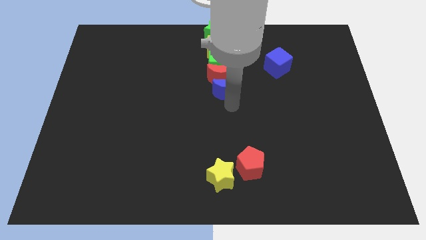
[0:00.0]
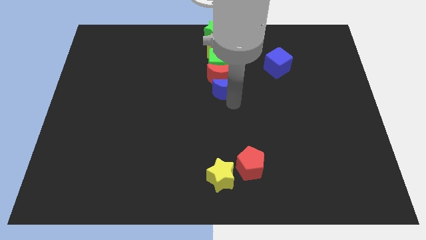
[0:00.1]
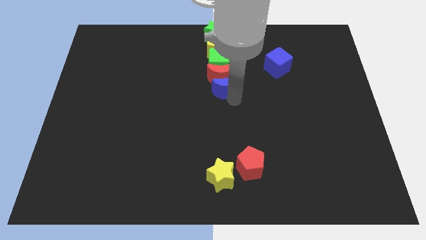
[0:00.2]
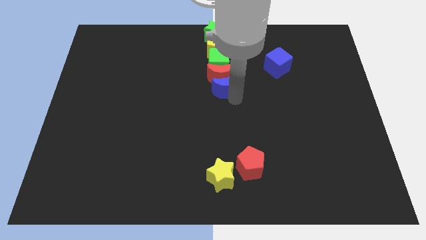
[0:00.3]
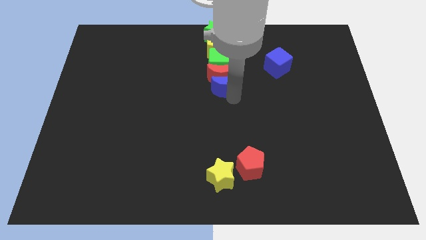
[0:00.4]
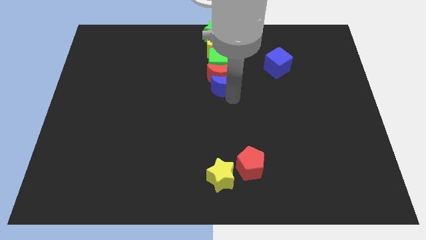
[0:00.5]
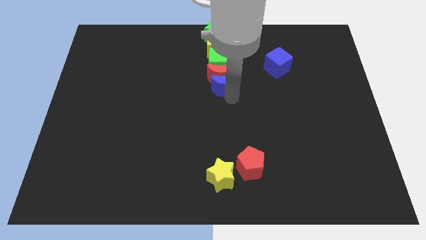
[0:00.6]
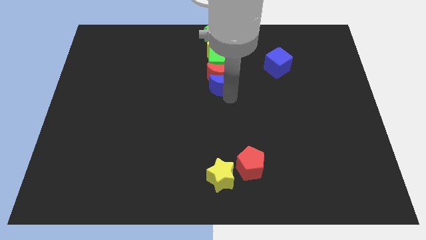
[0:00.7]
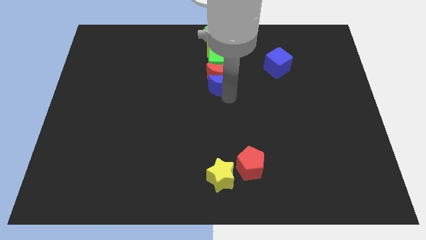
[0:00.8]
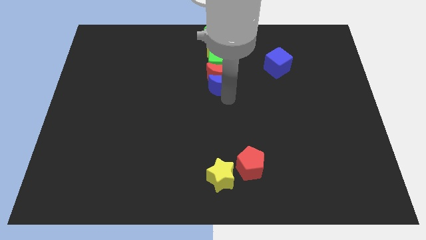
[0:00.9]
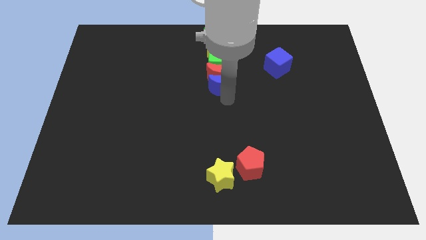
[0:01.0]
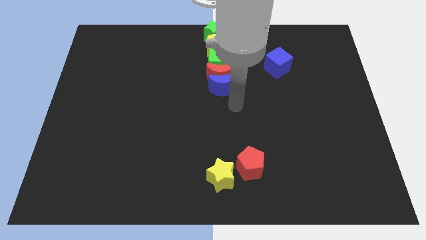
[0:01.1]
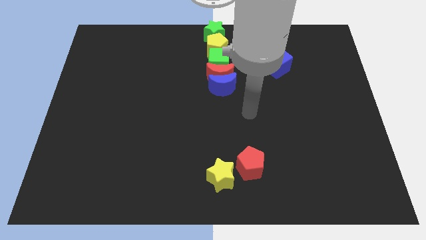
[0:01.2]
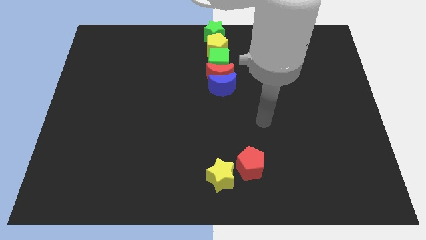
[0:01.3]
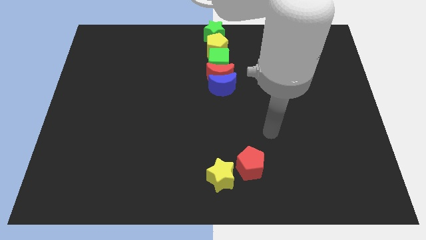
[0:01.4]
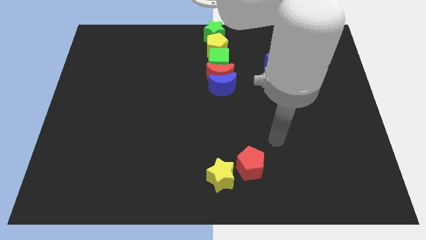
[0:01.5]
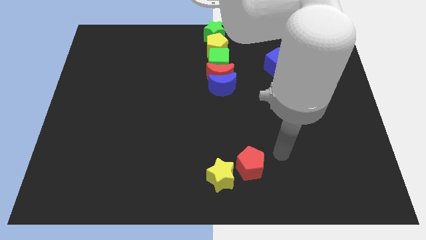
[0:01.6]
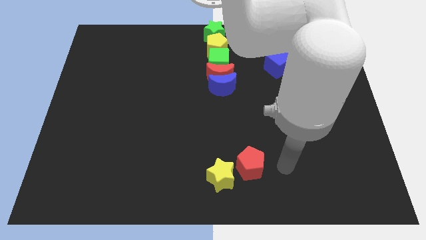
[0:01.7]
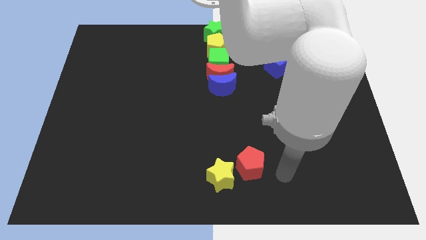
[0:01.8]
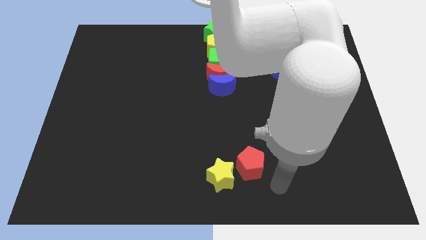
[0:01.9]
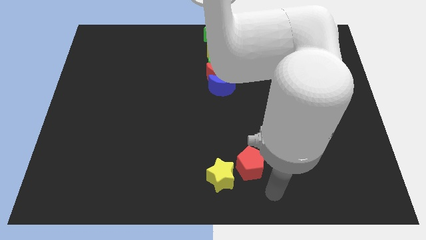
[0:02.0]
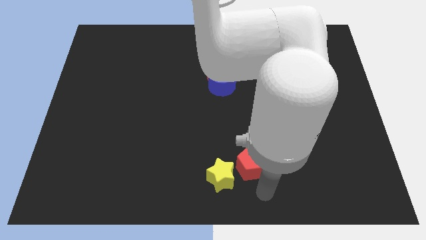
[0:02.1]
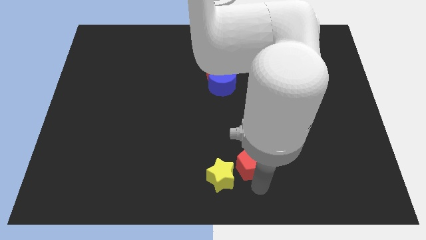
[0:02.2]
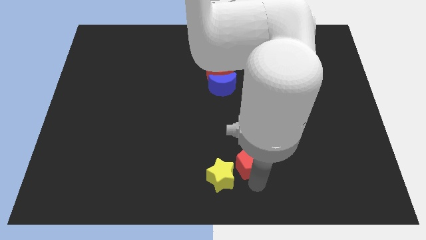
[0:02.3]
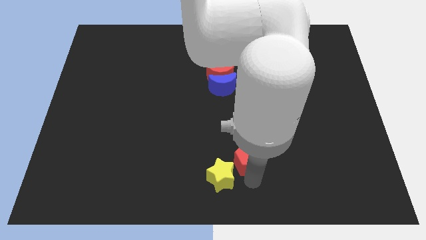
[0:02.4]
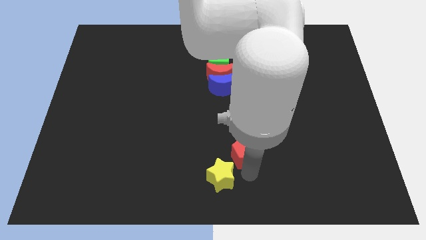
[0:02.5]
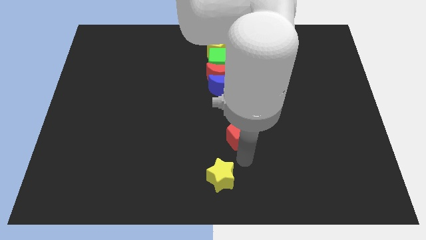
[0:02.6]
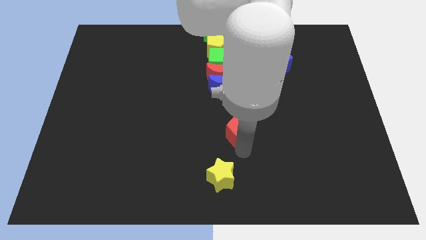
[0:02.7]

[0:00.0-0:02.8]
push the red pentagon to the top of the board

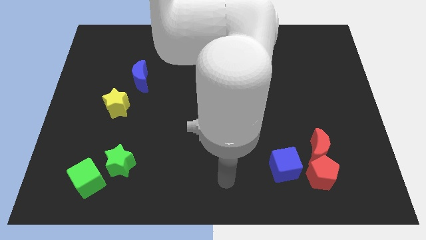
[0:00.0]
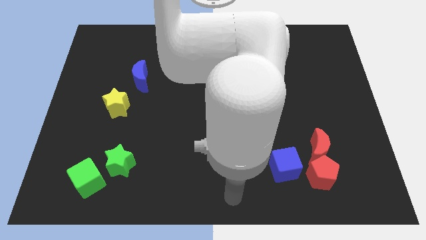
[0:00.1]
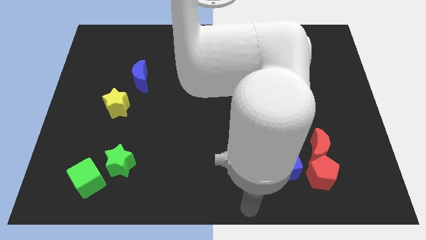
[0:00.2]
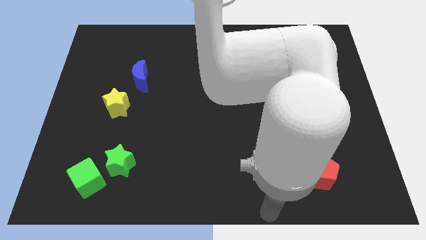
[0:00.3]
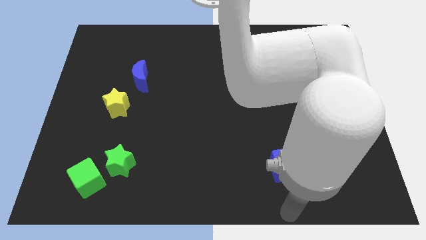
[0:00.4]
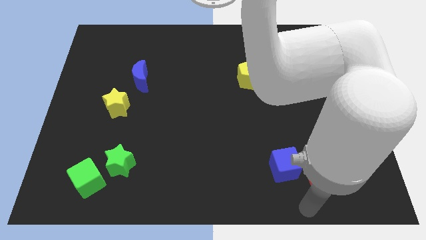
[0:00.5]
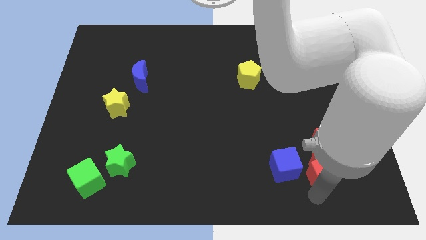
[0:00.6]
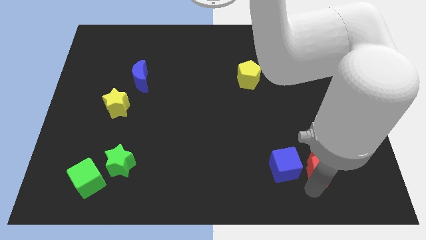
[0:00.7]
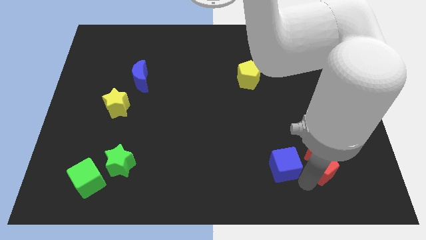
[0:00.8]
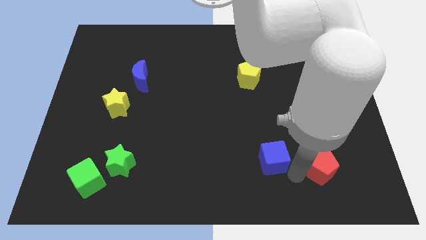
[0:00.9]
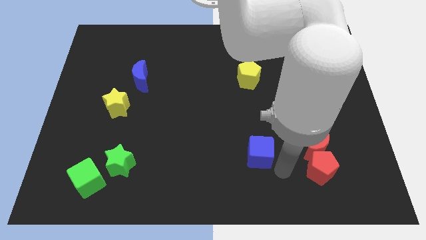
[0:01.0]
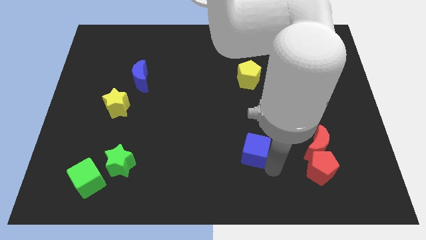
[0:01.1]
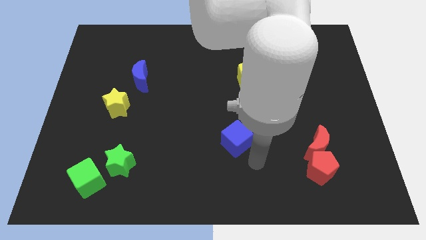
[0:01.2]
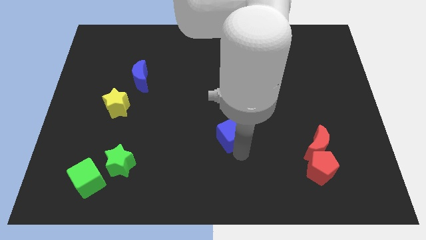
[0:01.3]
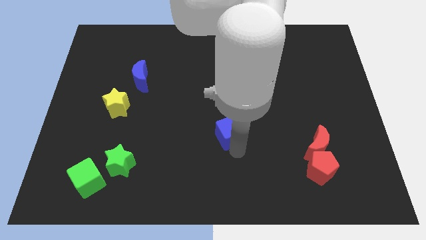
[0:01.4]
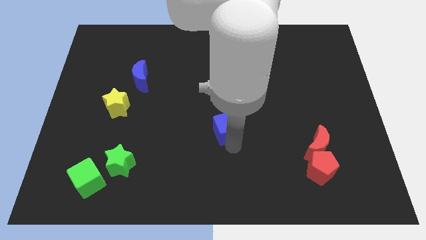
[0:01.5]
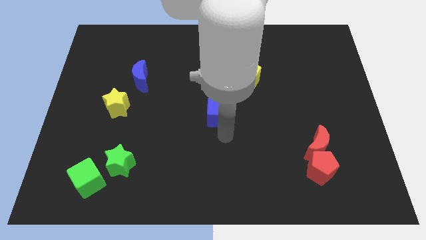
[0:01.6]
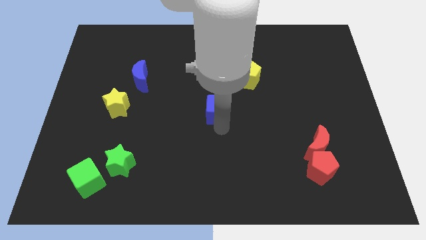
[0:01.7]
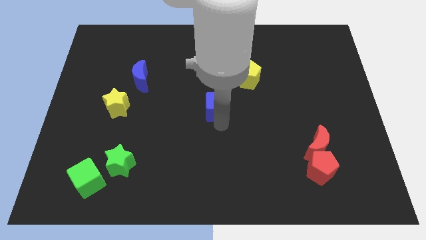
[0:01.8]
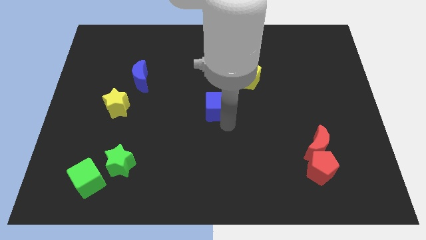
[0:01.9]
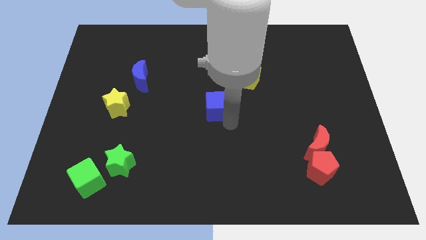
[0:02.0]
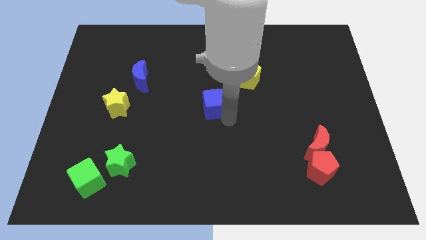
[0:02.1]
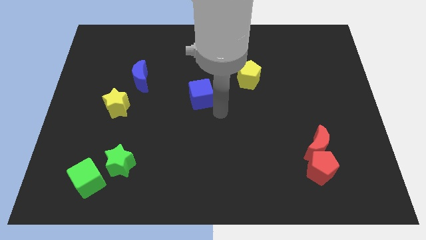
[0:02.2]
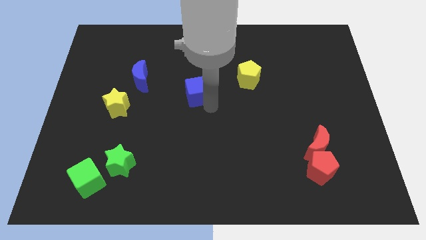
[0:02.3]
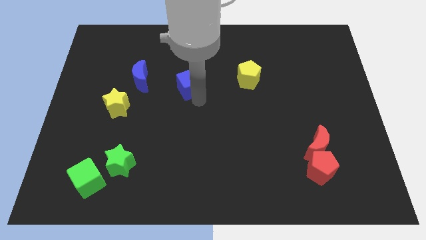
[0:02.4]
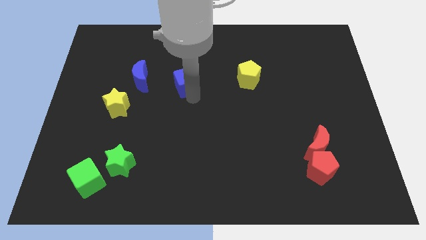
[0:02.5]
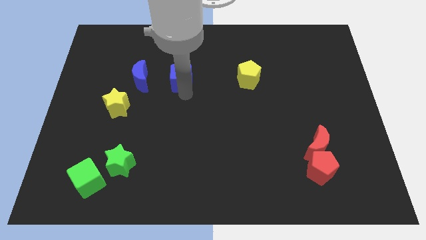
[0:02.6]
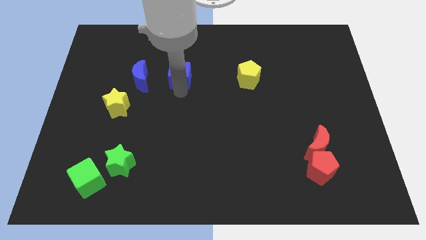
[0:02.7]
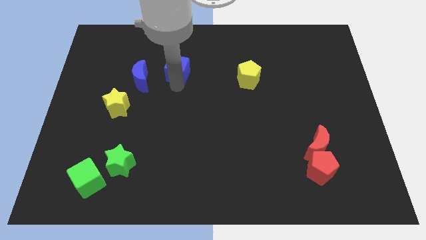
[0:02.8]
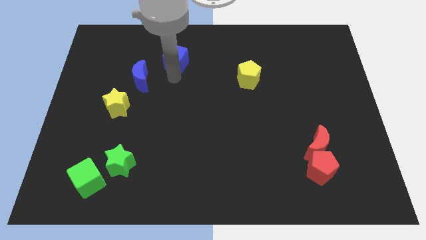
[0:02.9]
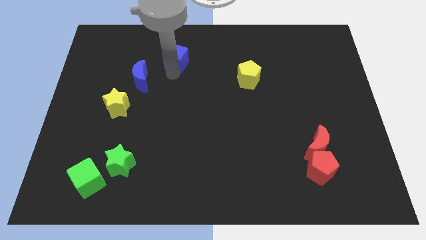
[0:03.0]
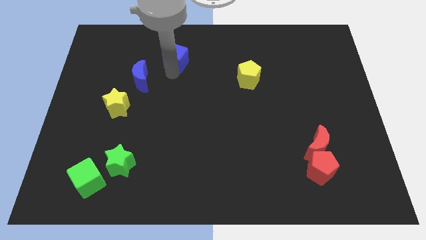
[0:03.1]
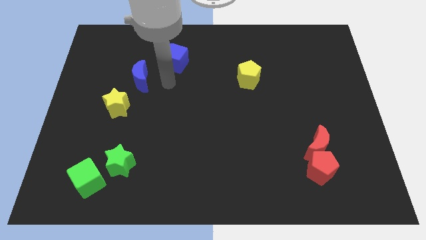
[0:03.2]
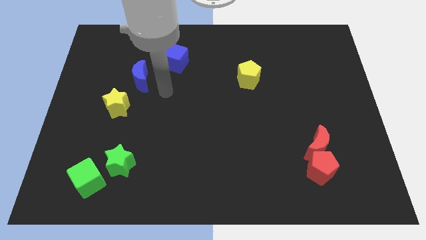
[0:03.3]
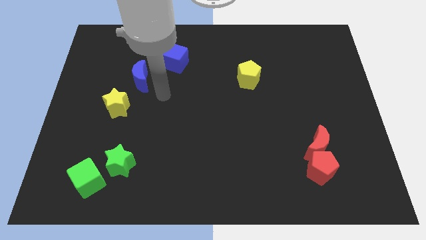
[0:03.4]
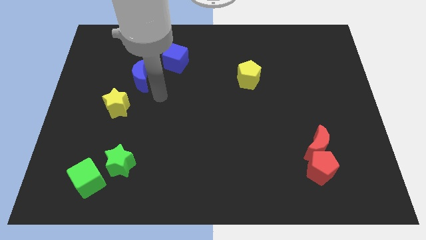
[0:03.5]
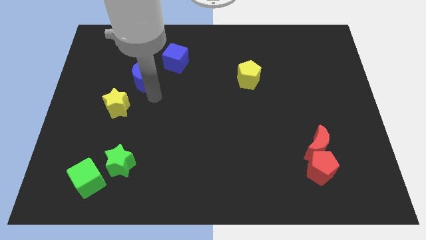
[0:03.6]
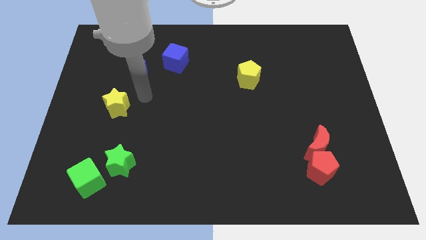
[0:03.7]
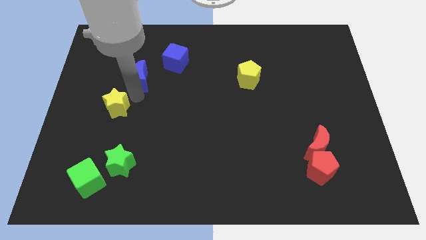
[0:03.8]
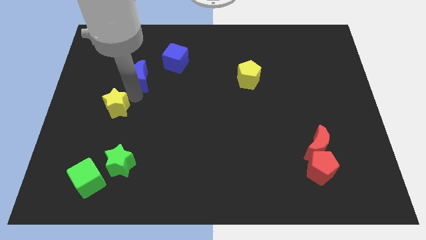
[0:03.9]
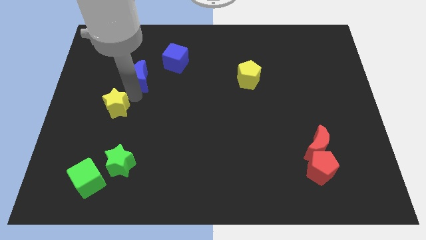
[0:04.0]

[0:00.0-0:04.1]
place blue cube to the top right of blue moon

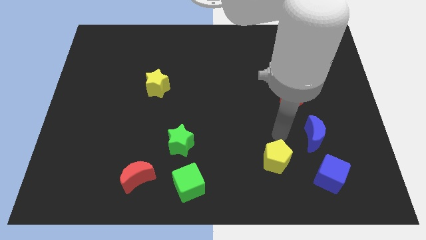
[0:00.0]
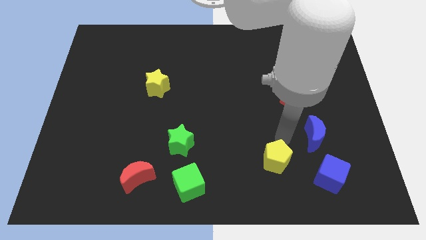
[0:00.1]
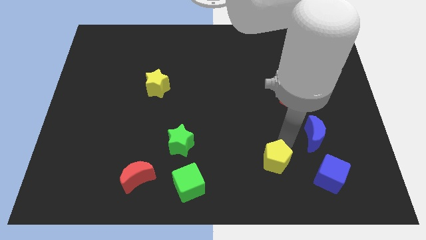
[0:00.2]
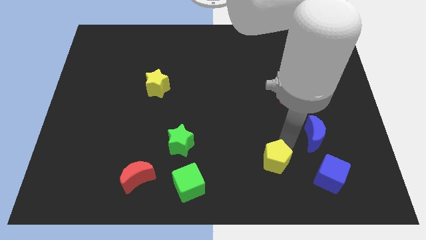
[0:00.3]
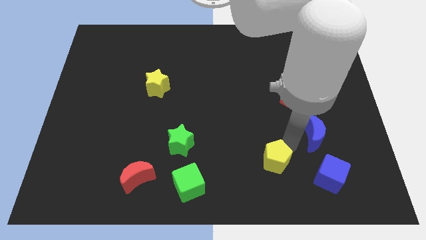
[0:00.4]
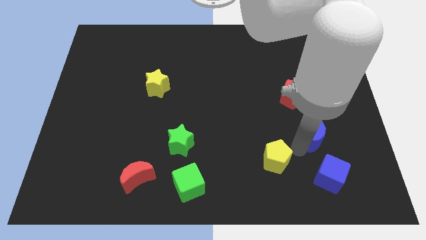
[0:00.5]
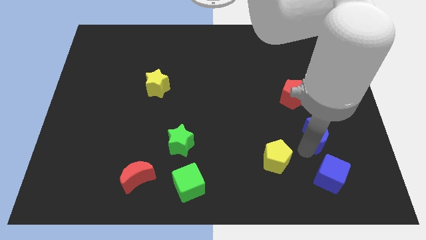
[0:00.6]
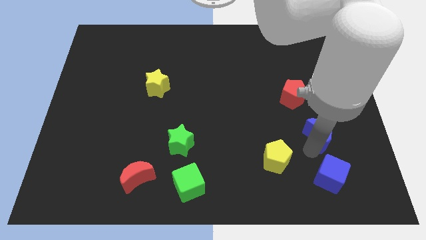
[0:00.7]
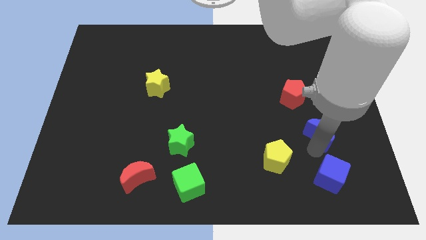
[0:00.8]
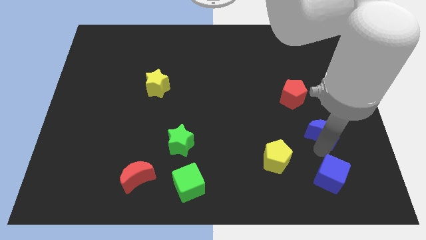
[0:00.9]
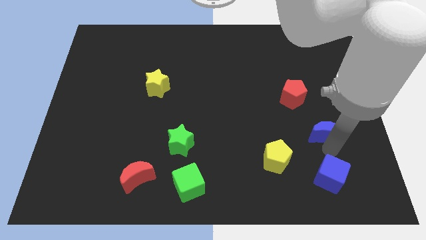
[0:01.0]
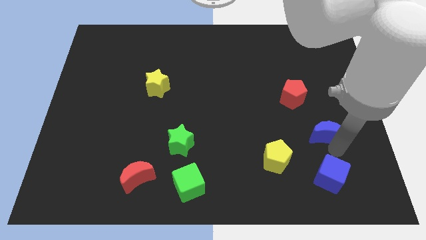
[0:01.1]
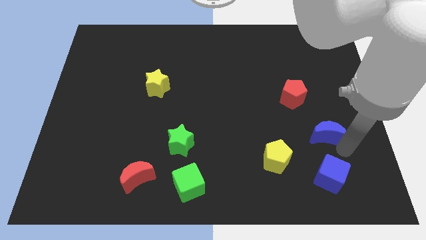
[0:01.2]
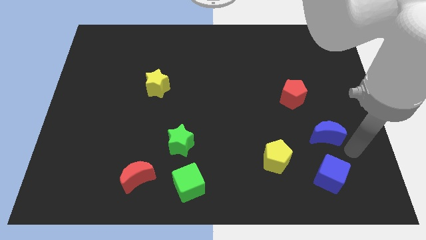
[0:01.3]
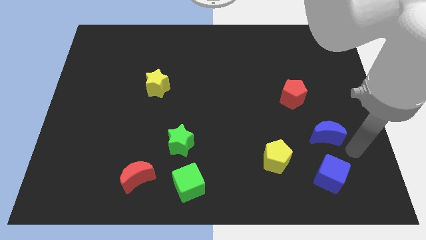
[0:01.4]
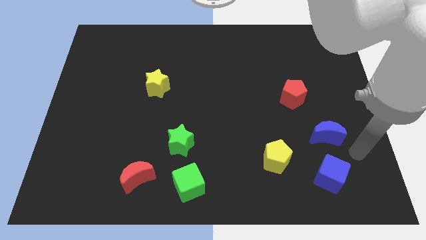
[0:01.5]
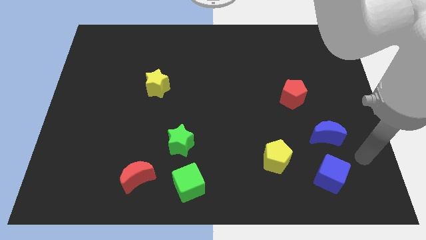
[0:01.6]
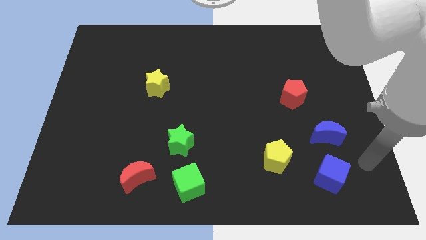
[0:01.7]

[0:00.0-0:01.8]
slide the blue moon towards the right

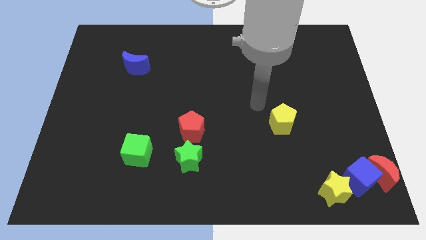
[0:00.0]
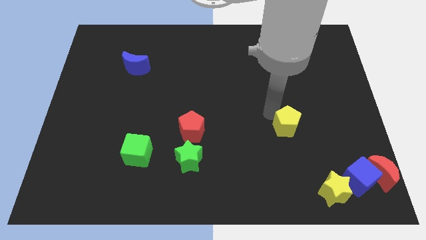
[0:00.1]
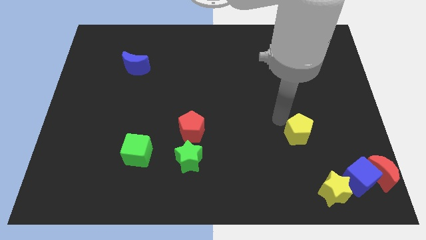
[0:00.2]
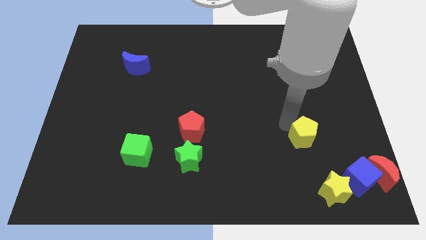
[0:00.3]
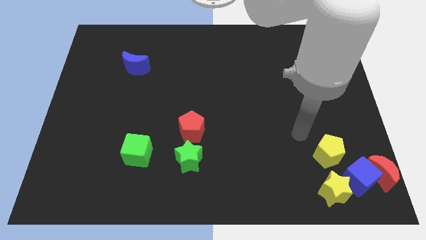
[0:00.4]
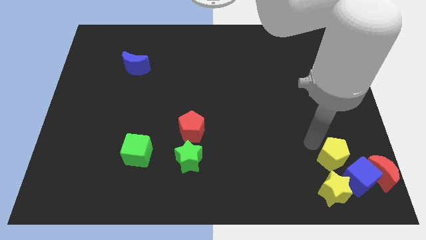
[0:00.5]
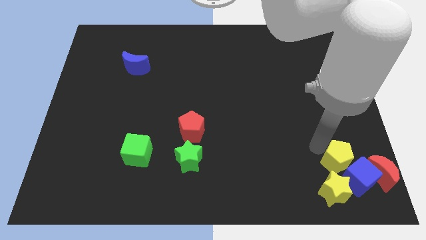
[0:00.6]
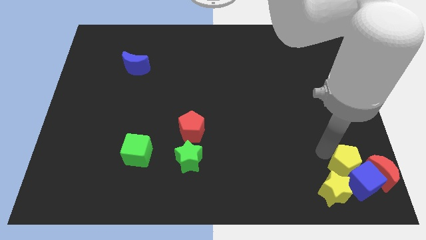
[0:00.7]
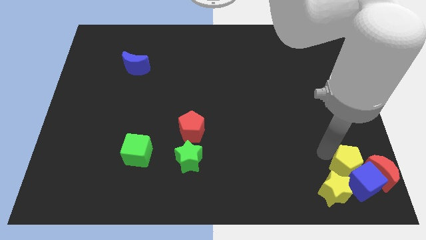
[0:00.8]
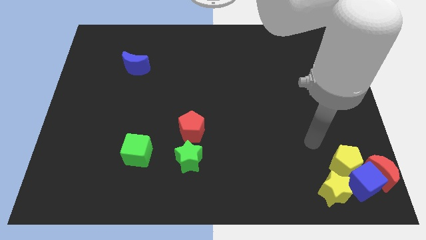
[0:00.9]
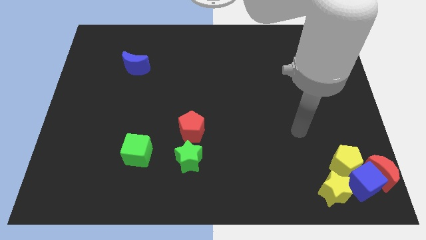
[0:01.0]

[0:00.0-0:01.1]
push the yellow pentagon into the blue cube
